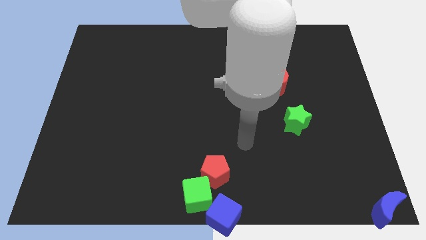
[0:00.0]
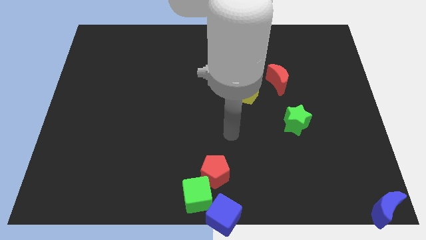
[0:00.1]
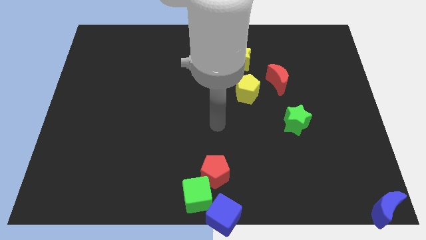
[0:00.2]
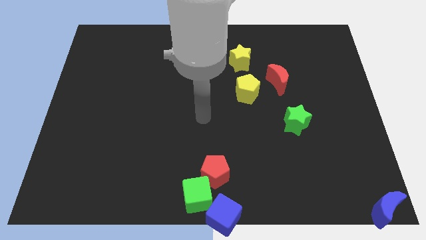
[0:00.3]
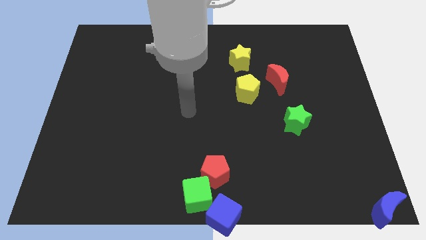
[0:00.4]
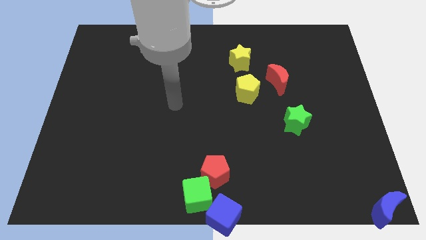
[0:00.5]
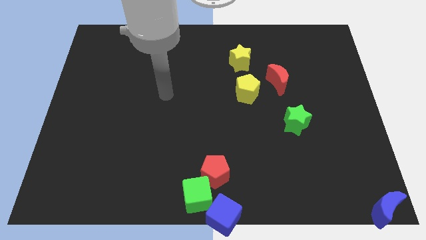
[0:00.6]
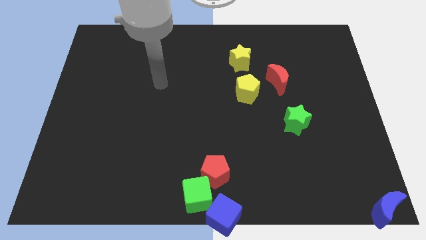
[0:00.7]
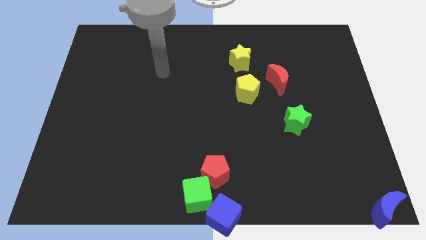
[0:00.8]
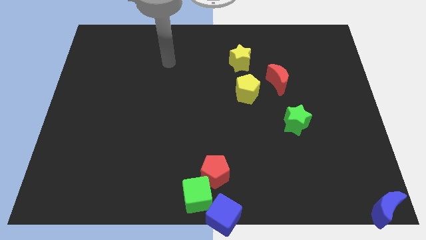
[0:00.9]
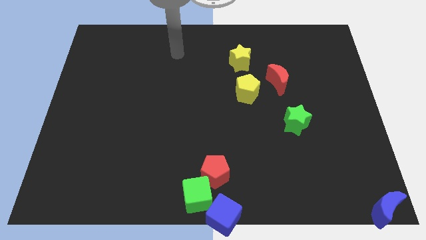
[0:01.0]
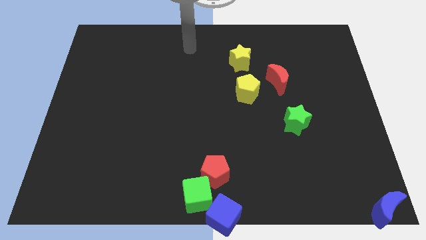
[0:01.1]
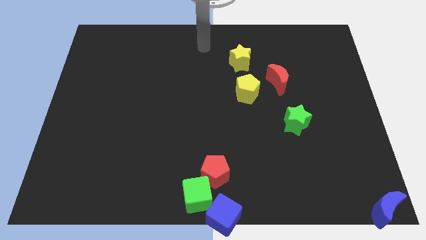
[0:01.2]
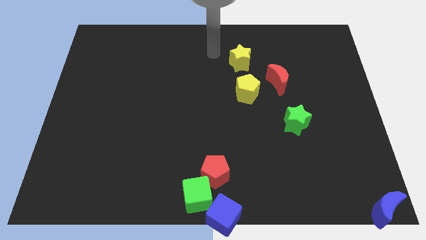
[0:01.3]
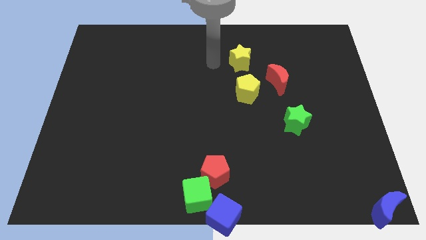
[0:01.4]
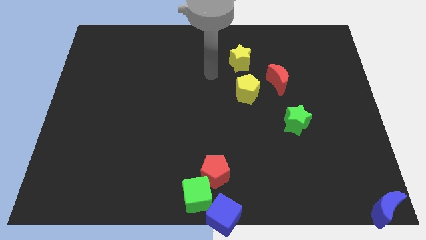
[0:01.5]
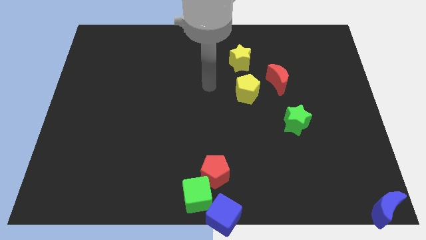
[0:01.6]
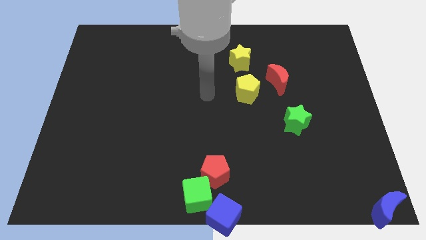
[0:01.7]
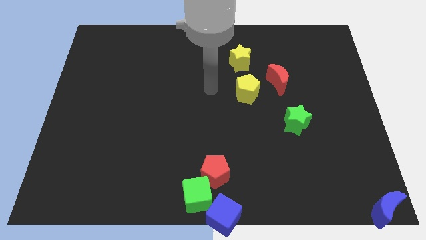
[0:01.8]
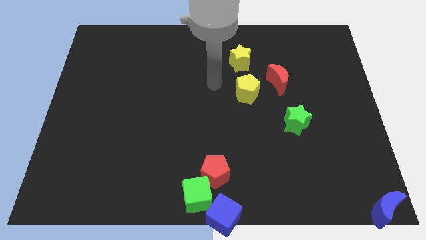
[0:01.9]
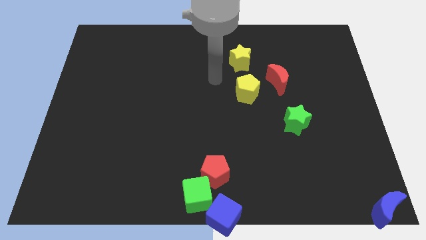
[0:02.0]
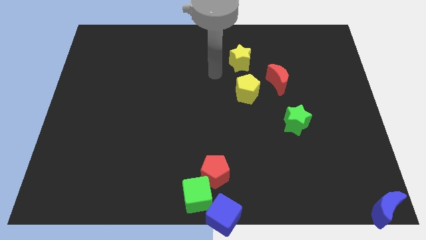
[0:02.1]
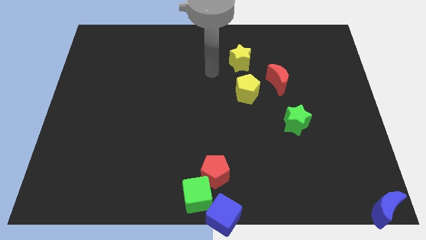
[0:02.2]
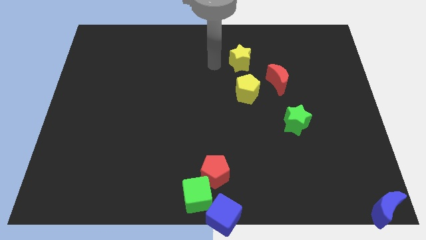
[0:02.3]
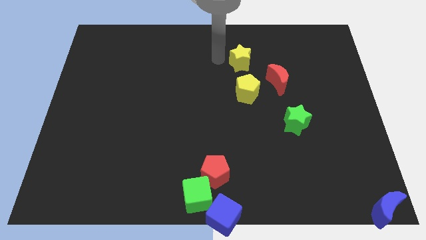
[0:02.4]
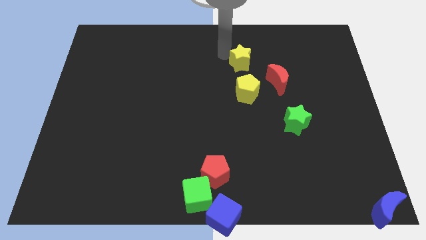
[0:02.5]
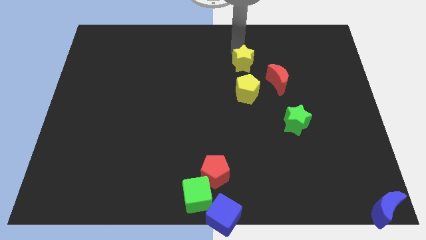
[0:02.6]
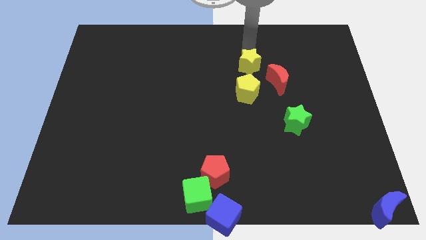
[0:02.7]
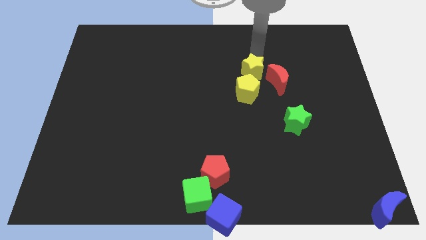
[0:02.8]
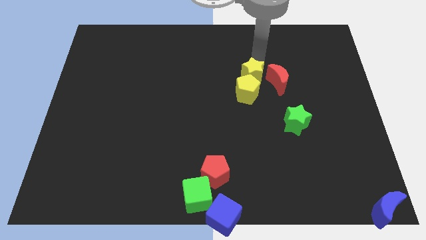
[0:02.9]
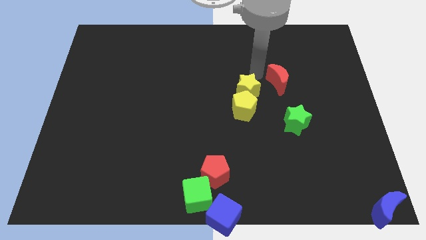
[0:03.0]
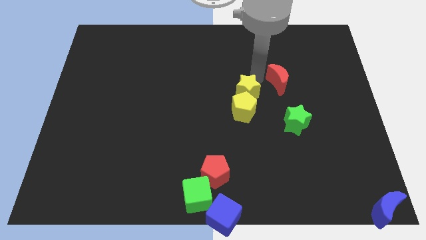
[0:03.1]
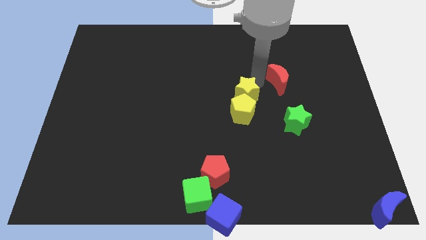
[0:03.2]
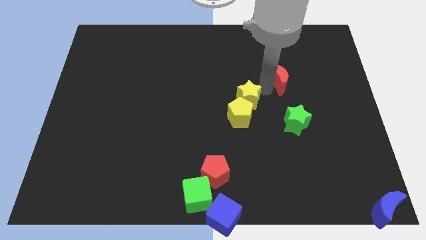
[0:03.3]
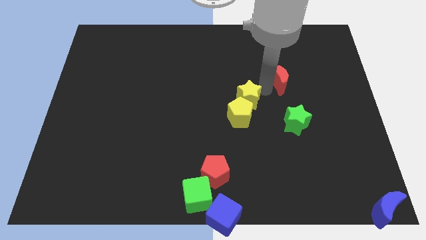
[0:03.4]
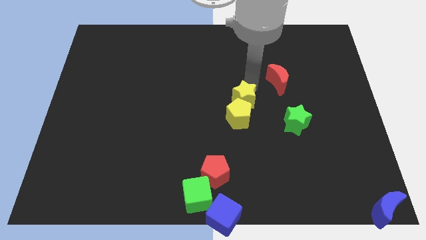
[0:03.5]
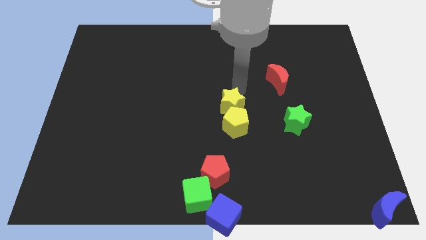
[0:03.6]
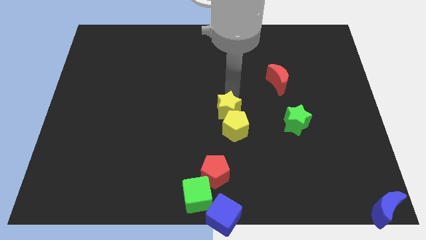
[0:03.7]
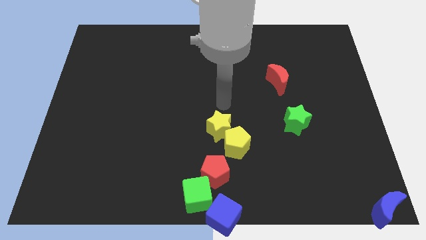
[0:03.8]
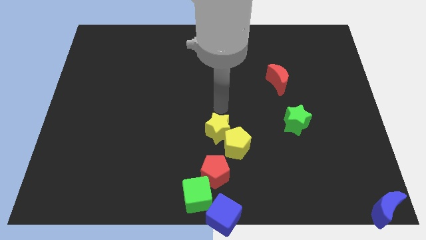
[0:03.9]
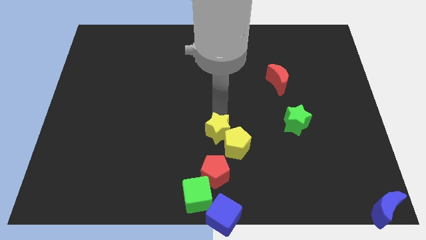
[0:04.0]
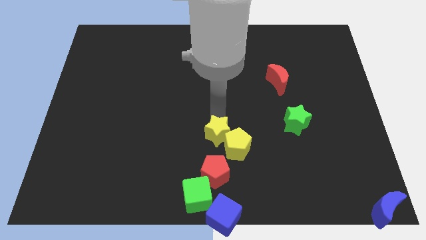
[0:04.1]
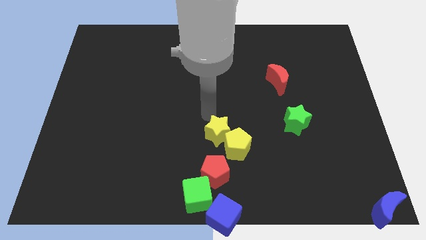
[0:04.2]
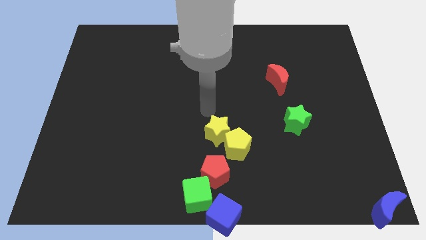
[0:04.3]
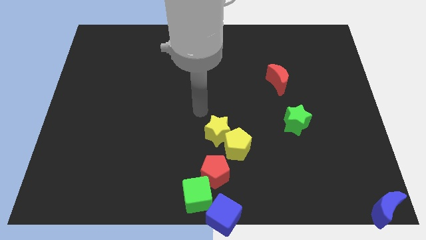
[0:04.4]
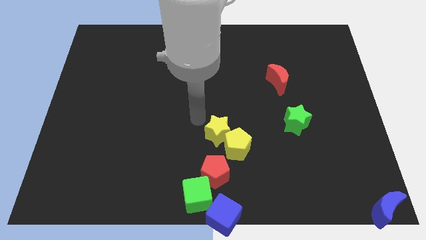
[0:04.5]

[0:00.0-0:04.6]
move the yellow pentagon with the help of the yellow star towards down

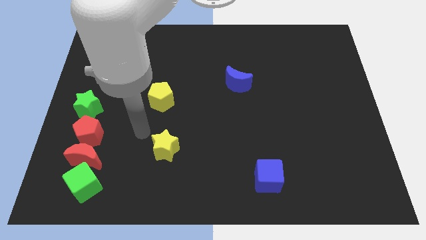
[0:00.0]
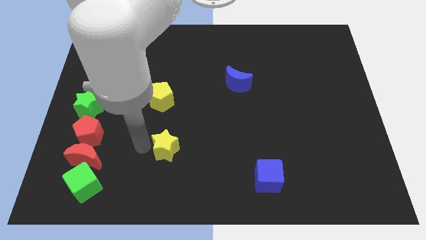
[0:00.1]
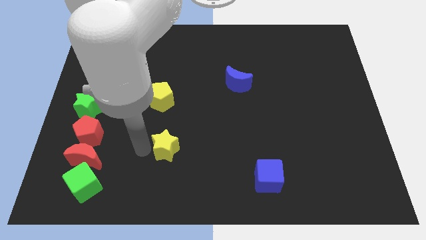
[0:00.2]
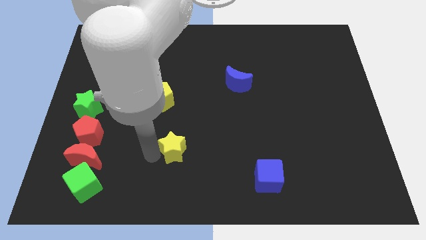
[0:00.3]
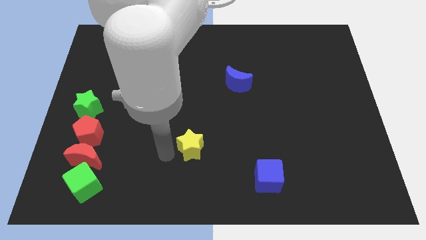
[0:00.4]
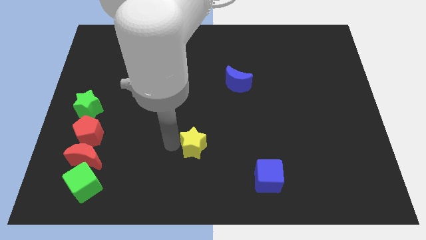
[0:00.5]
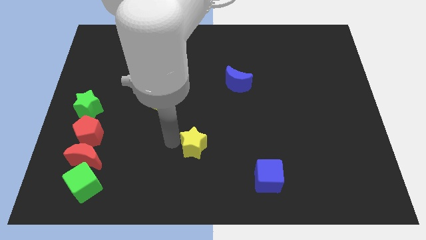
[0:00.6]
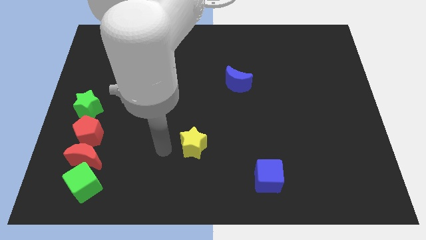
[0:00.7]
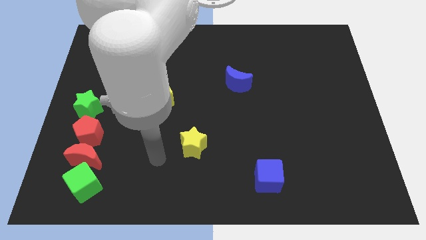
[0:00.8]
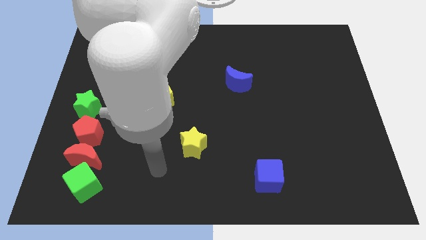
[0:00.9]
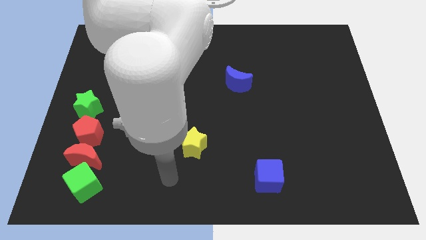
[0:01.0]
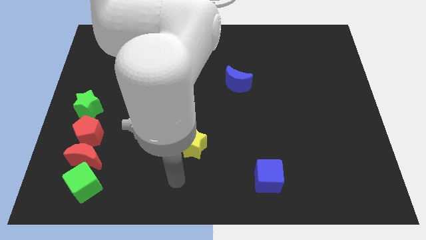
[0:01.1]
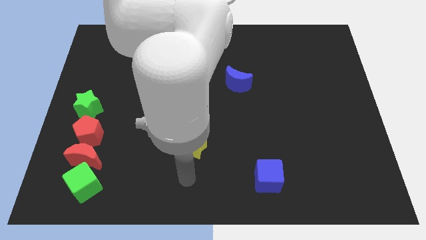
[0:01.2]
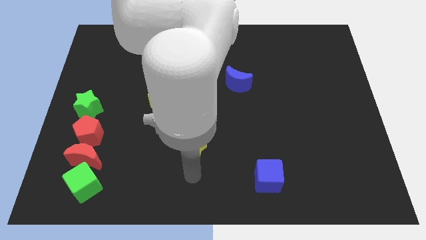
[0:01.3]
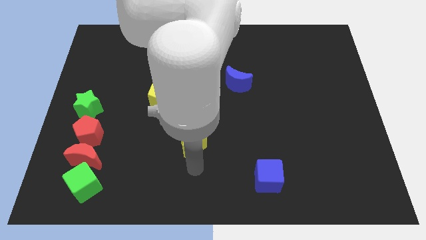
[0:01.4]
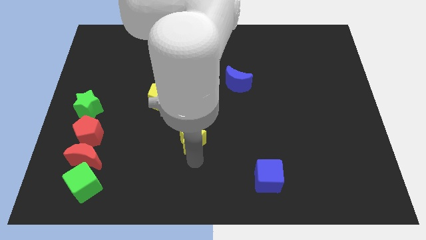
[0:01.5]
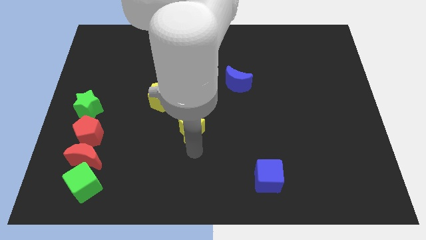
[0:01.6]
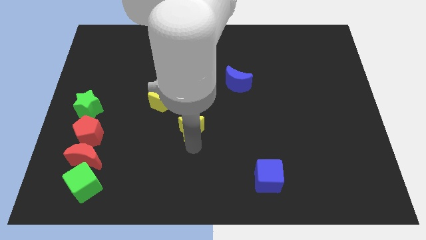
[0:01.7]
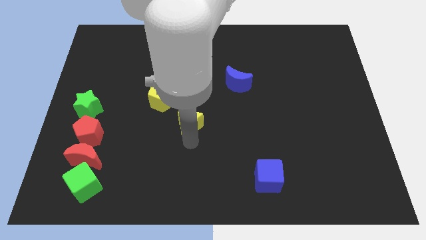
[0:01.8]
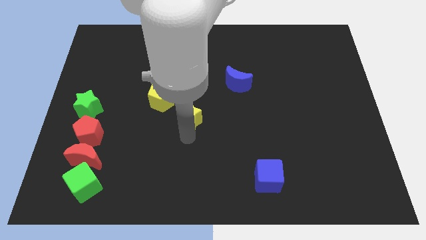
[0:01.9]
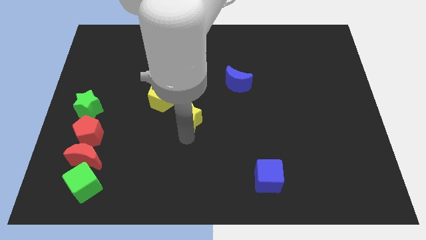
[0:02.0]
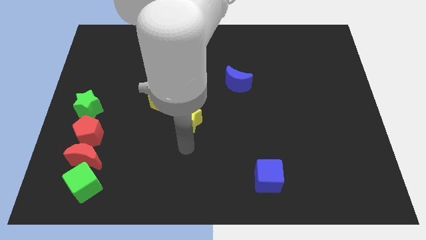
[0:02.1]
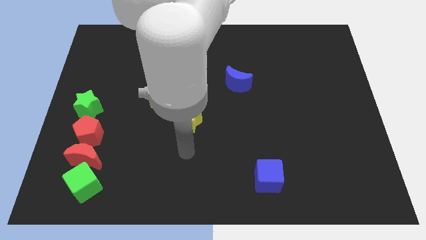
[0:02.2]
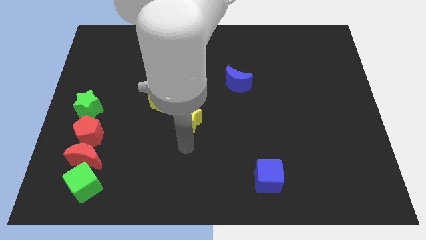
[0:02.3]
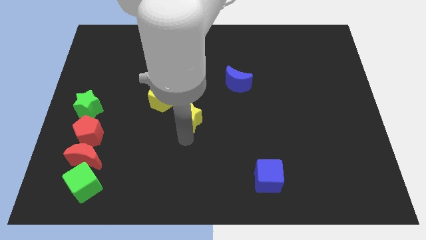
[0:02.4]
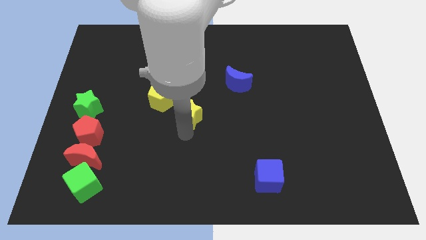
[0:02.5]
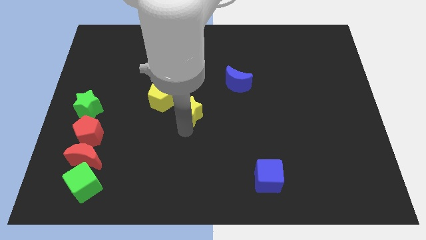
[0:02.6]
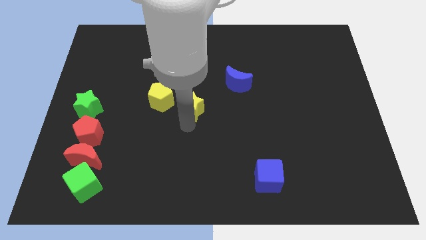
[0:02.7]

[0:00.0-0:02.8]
push the yellow star to the bottom left of the blue crescent

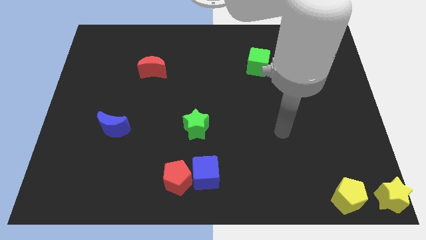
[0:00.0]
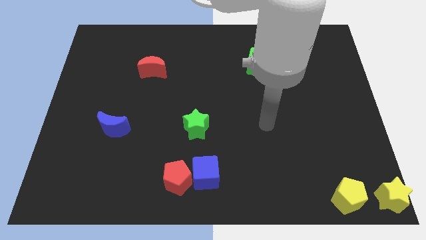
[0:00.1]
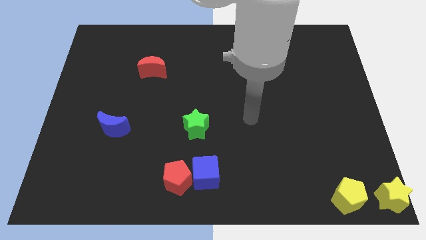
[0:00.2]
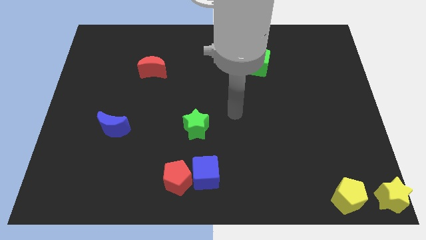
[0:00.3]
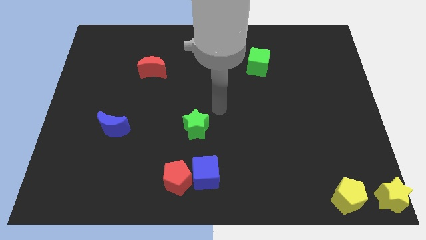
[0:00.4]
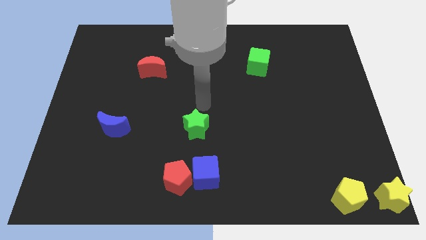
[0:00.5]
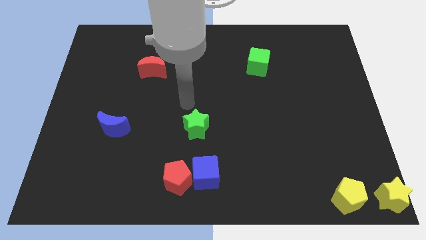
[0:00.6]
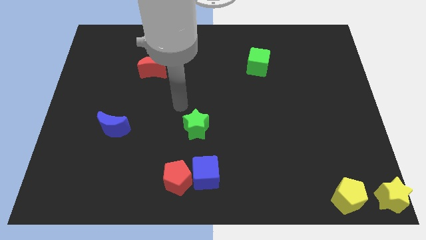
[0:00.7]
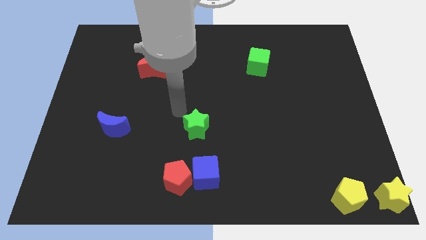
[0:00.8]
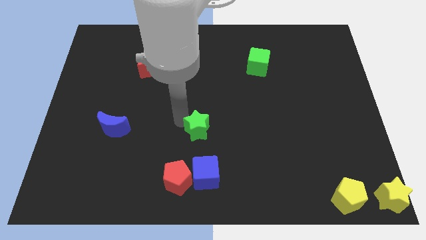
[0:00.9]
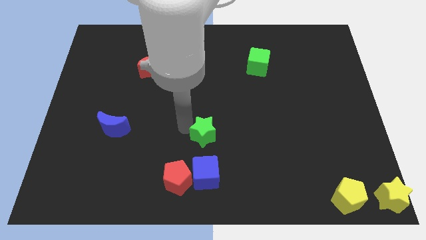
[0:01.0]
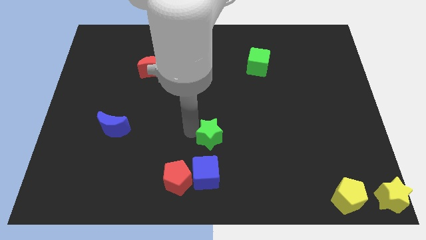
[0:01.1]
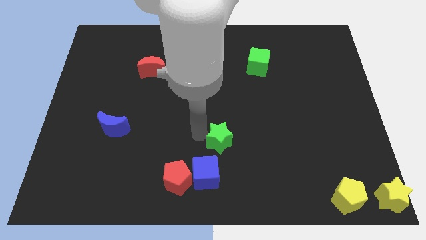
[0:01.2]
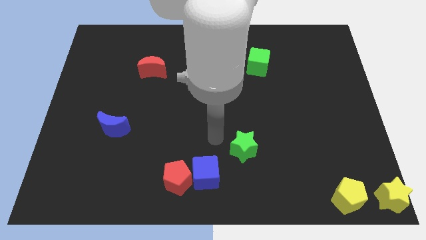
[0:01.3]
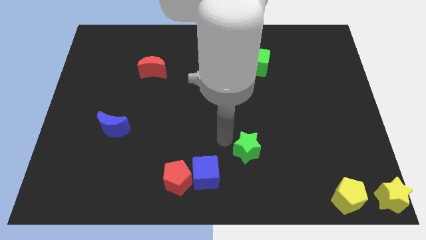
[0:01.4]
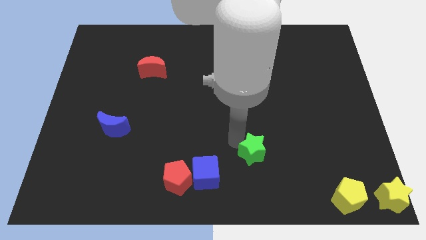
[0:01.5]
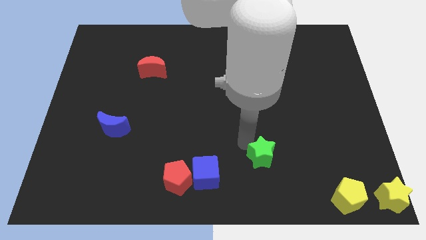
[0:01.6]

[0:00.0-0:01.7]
drag the green star towards the yellow pentagon
